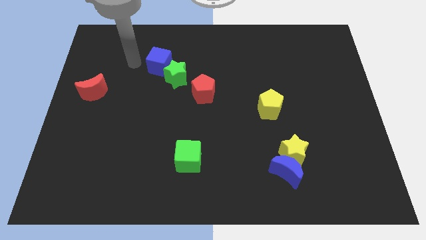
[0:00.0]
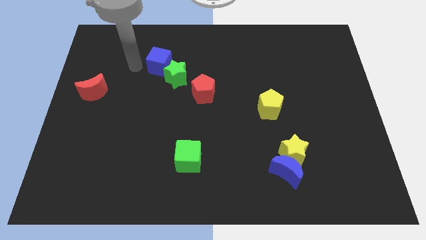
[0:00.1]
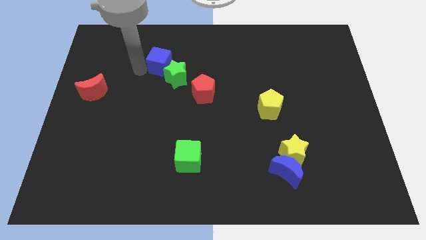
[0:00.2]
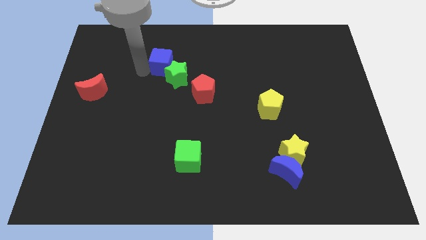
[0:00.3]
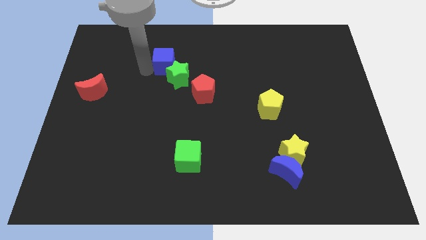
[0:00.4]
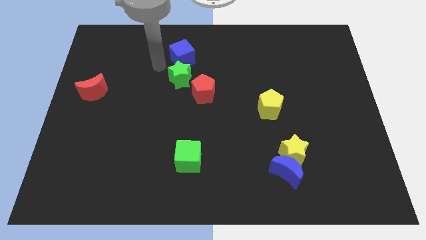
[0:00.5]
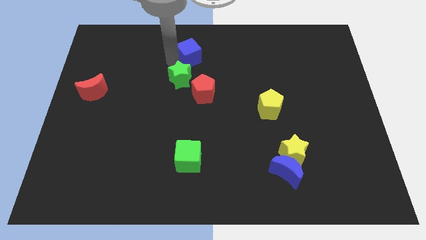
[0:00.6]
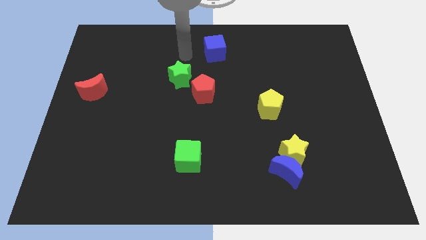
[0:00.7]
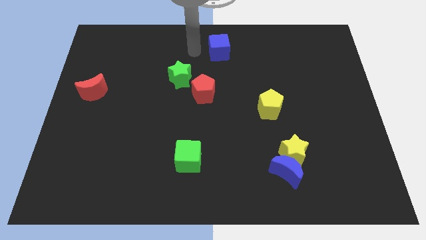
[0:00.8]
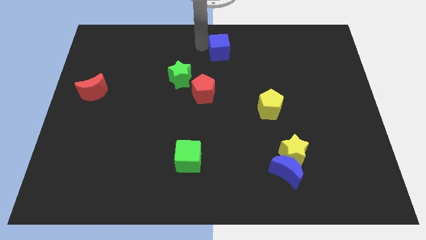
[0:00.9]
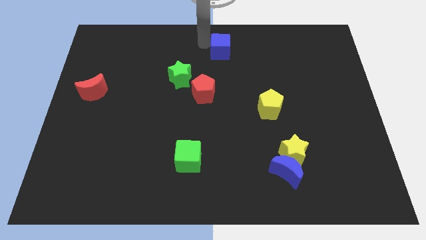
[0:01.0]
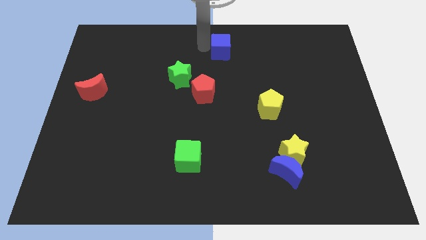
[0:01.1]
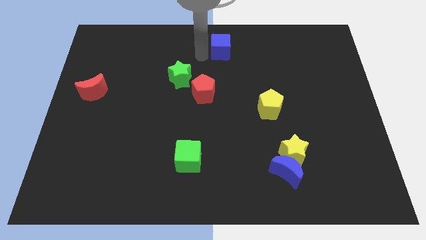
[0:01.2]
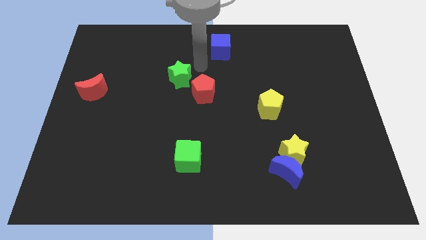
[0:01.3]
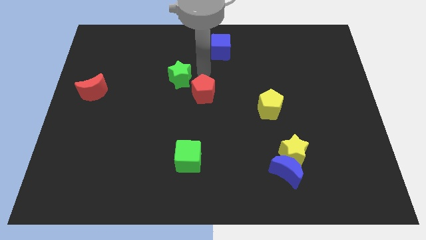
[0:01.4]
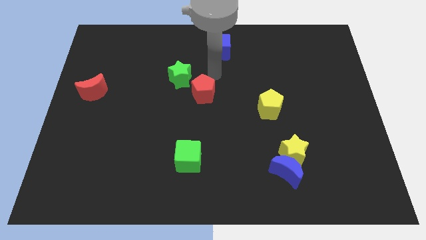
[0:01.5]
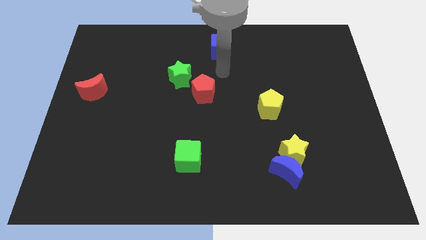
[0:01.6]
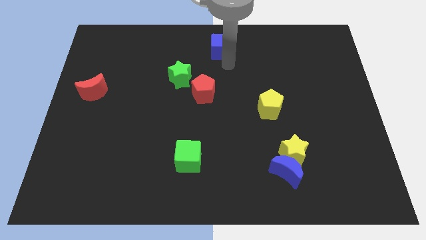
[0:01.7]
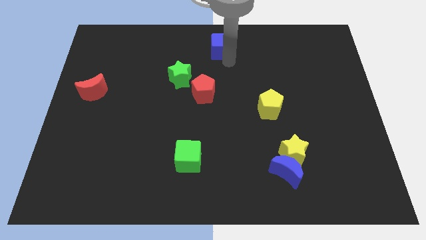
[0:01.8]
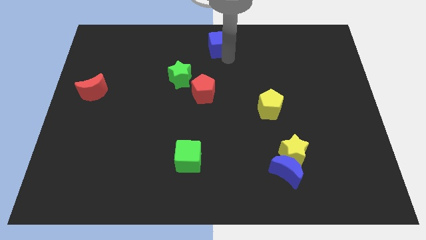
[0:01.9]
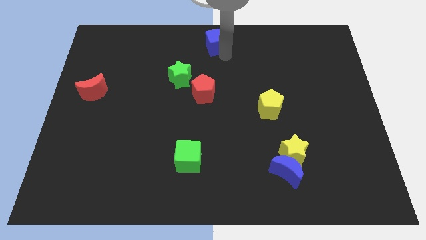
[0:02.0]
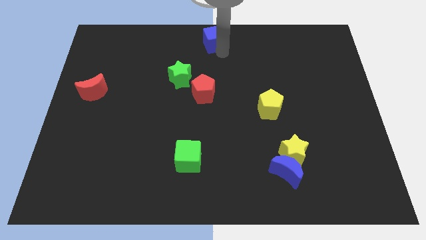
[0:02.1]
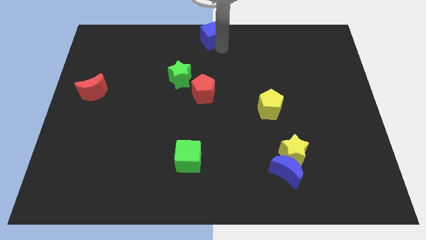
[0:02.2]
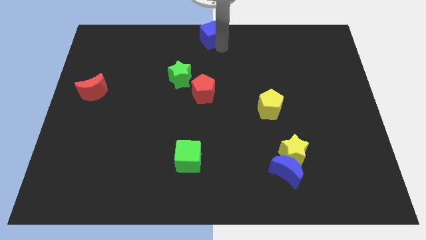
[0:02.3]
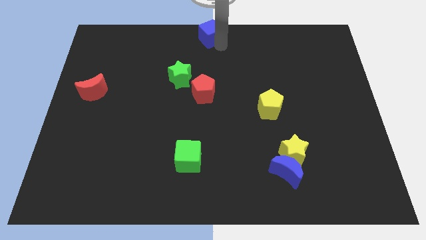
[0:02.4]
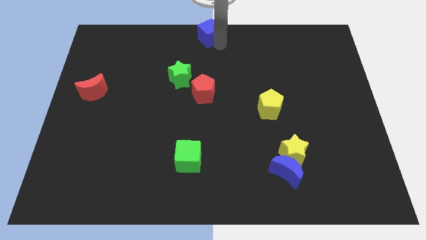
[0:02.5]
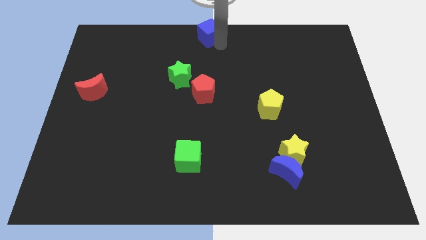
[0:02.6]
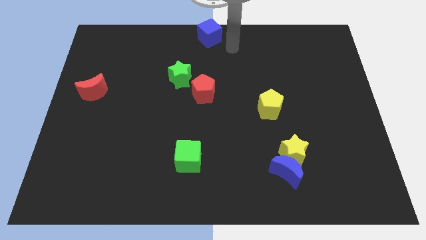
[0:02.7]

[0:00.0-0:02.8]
move the blue cube to the top center of the board

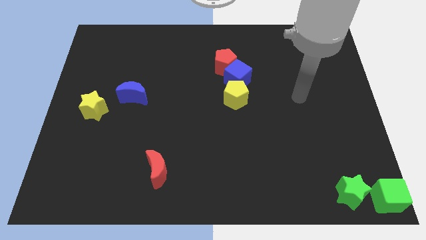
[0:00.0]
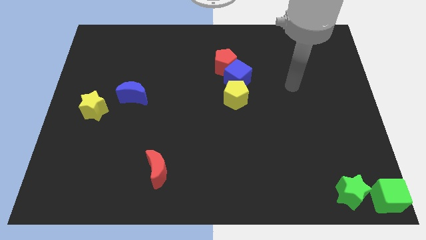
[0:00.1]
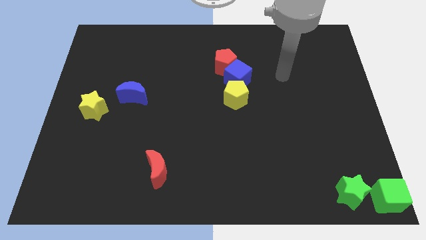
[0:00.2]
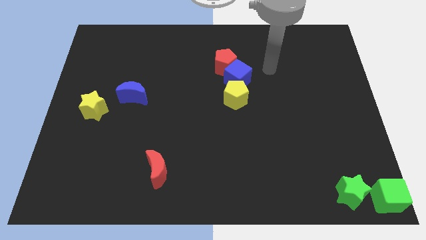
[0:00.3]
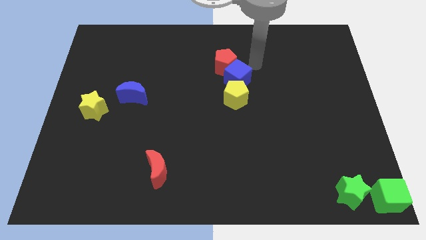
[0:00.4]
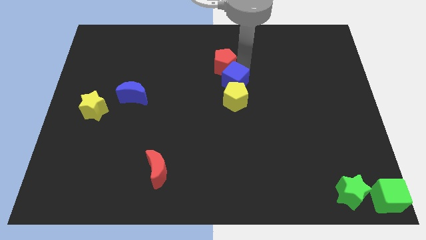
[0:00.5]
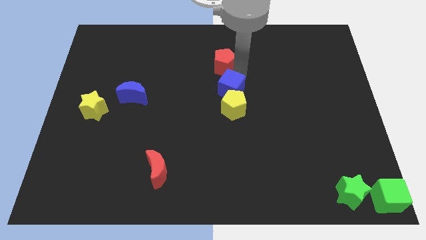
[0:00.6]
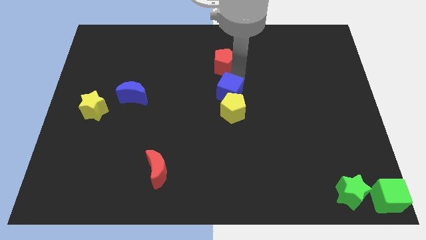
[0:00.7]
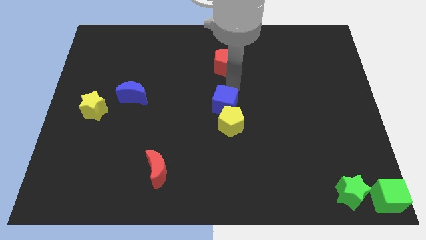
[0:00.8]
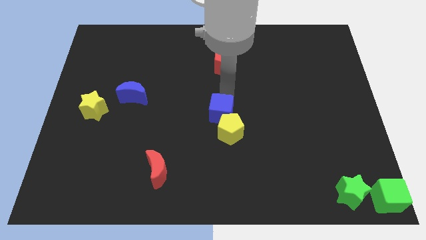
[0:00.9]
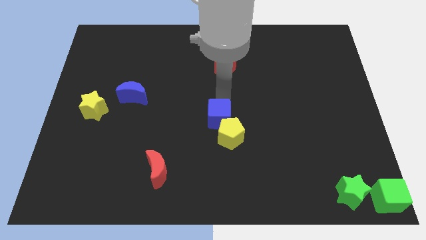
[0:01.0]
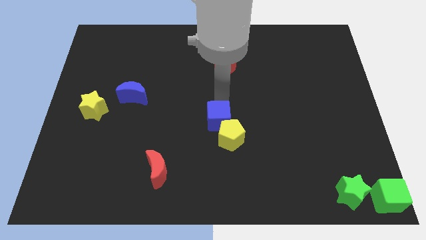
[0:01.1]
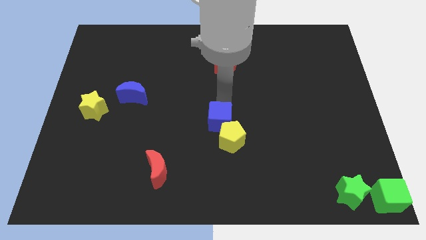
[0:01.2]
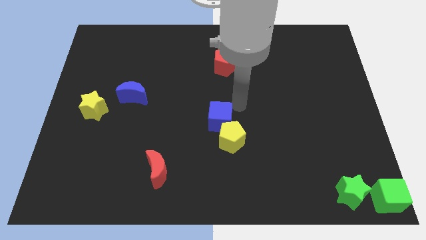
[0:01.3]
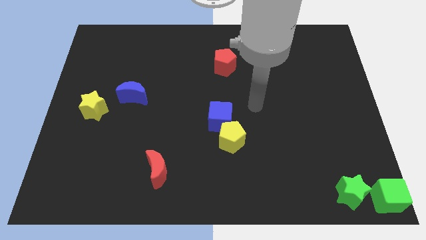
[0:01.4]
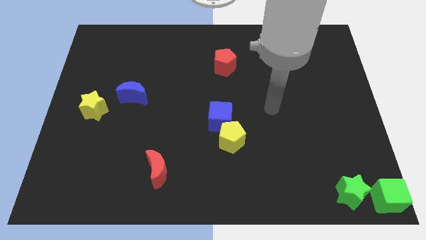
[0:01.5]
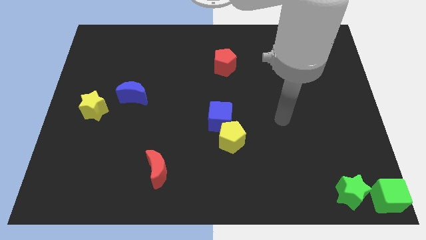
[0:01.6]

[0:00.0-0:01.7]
move the blue cube and the yellow pentagon towards the center of the board

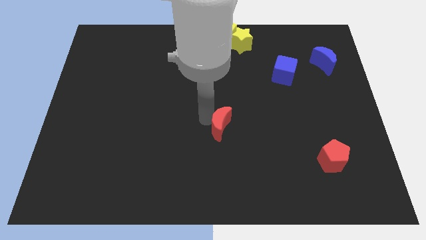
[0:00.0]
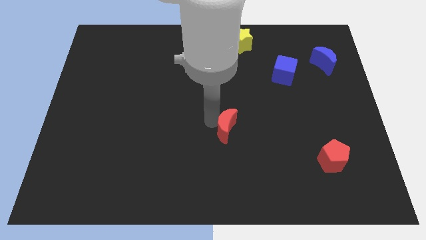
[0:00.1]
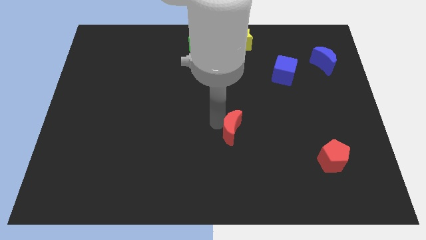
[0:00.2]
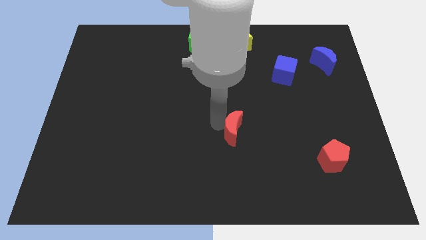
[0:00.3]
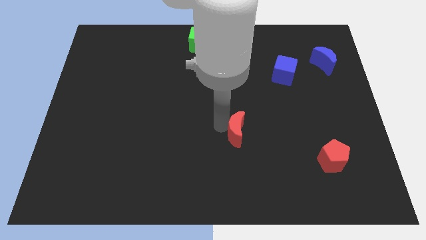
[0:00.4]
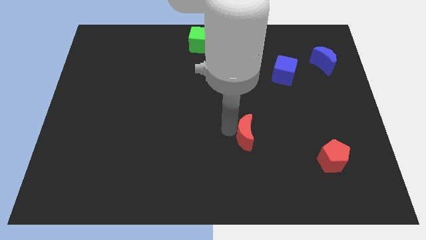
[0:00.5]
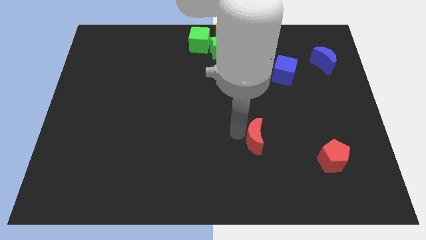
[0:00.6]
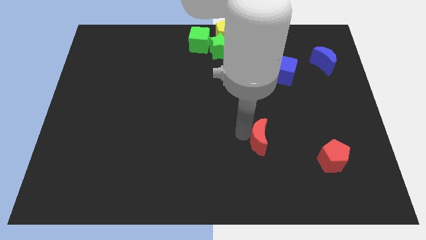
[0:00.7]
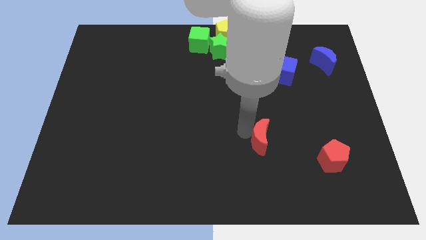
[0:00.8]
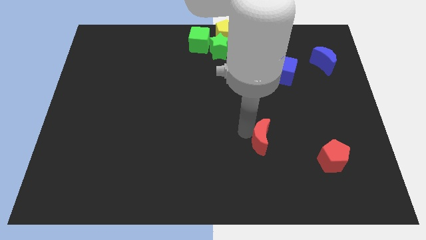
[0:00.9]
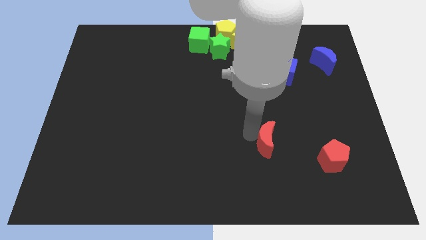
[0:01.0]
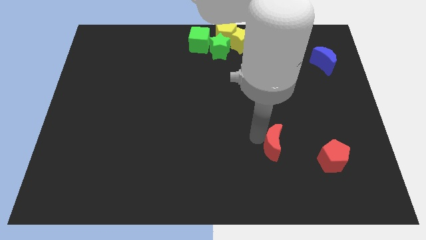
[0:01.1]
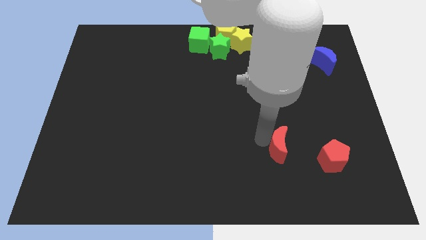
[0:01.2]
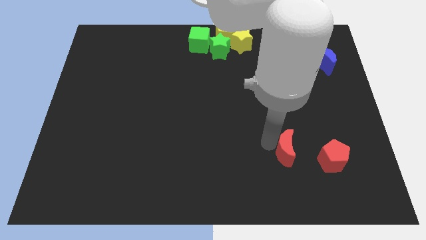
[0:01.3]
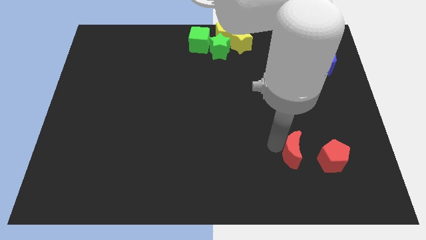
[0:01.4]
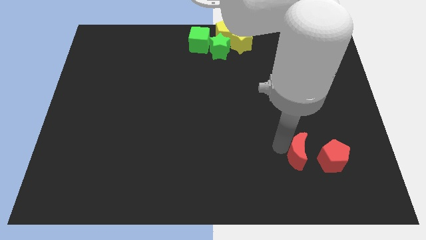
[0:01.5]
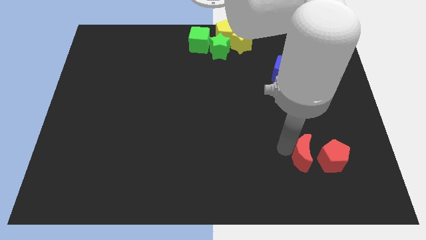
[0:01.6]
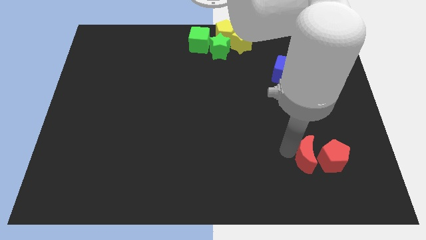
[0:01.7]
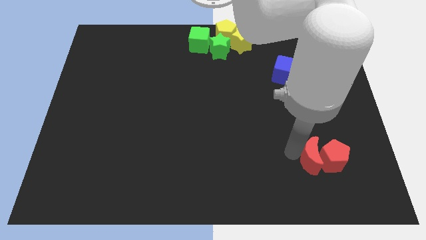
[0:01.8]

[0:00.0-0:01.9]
push red crescent into the red pentagon at the bottom right

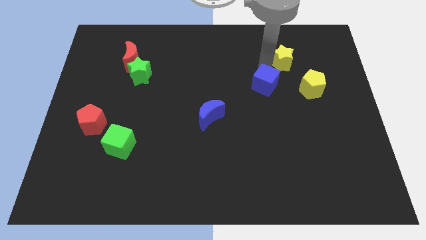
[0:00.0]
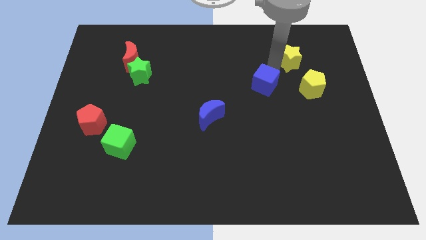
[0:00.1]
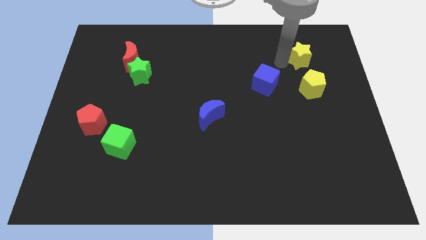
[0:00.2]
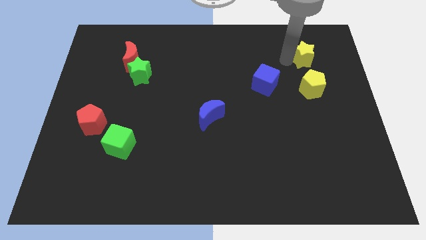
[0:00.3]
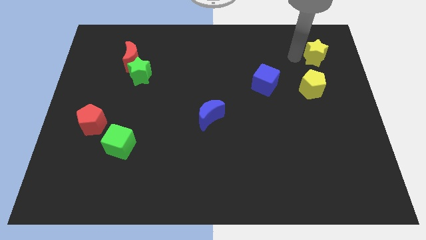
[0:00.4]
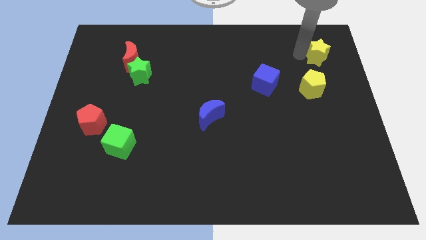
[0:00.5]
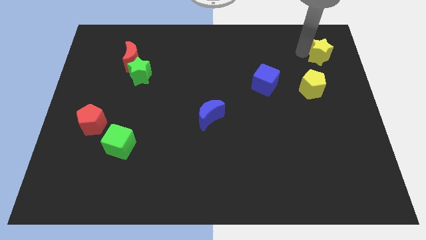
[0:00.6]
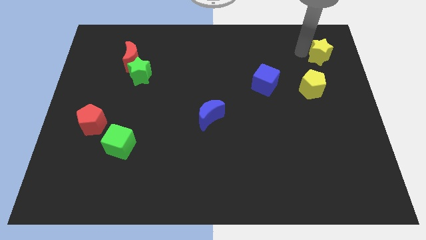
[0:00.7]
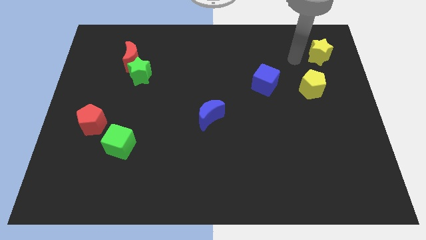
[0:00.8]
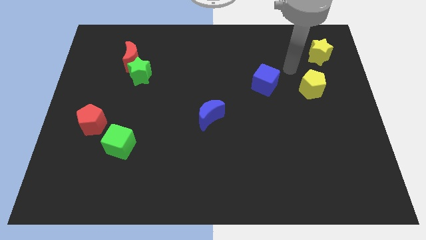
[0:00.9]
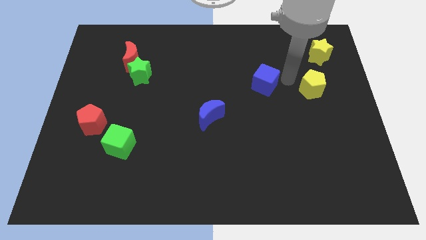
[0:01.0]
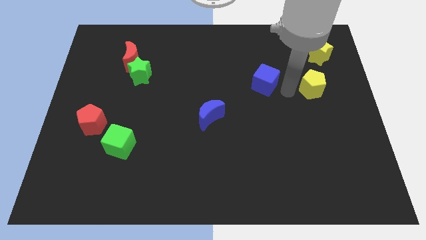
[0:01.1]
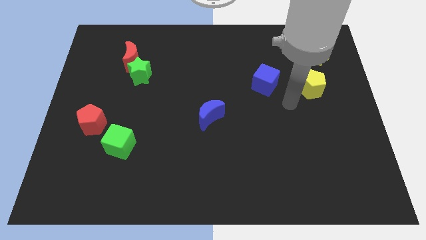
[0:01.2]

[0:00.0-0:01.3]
move yellow star to the top right corner of the board

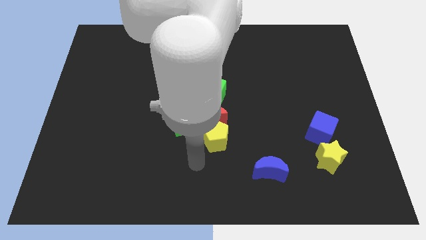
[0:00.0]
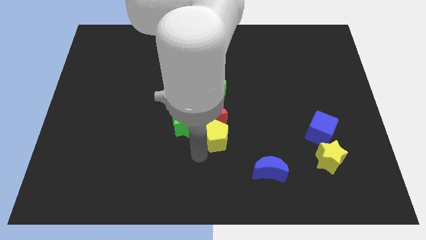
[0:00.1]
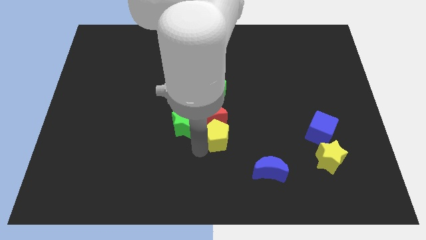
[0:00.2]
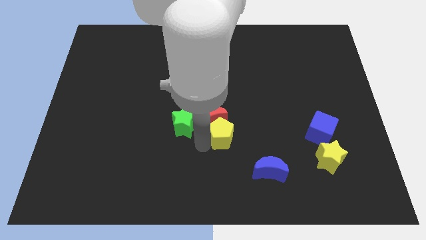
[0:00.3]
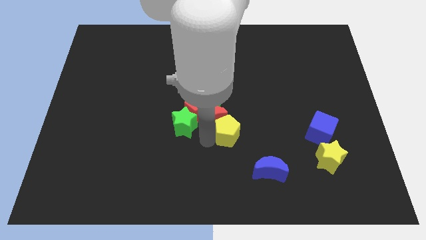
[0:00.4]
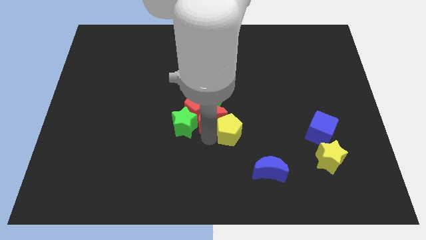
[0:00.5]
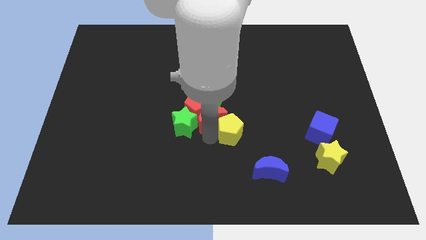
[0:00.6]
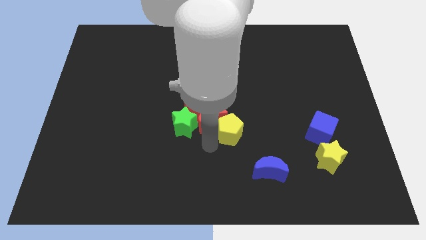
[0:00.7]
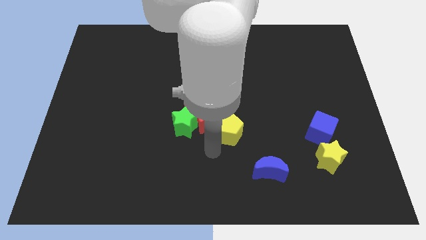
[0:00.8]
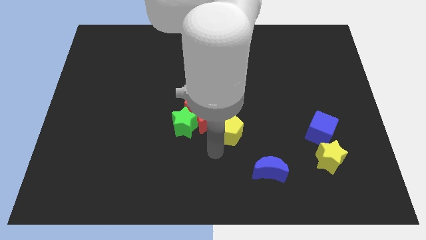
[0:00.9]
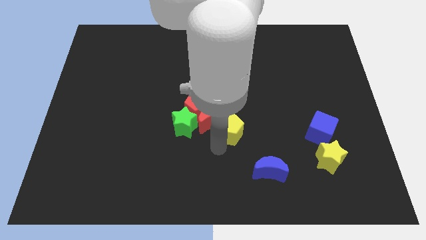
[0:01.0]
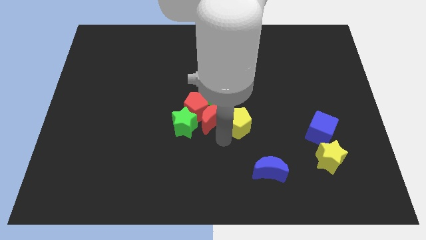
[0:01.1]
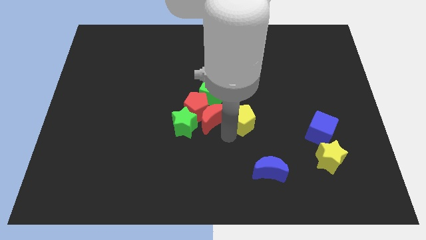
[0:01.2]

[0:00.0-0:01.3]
slide the yellow pentagon to the right of the red moon
